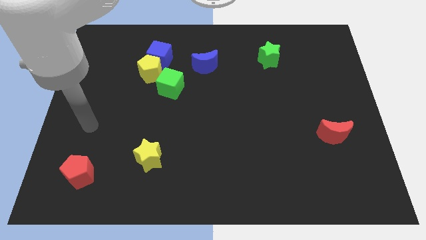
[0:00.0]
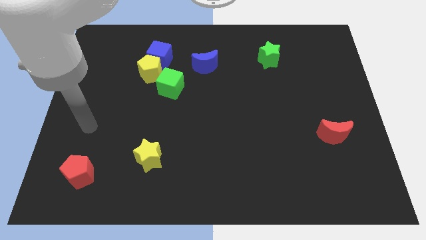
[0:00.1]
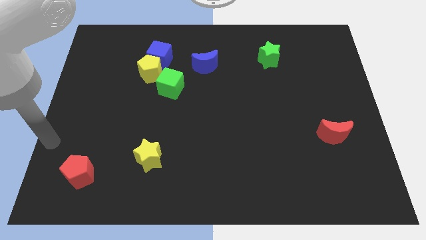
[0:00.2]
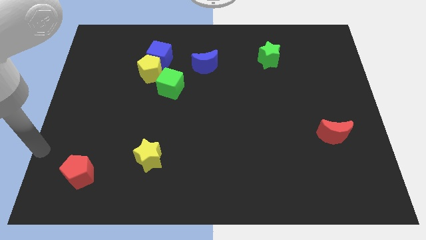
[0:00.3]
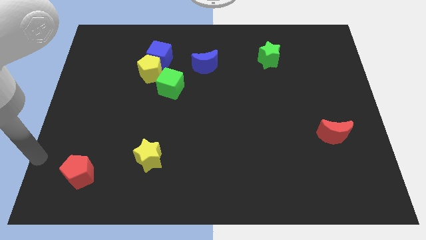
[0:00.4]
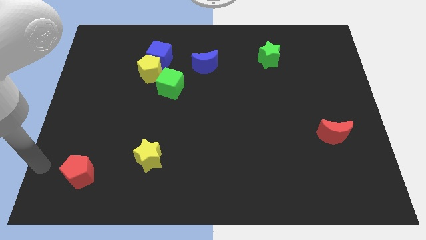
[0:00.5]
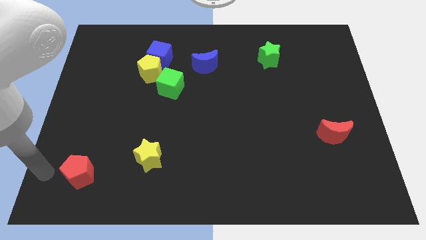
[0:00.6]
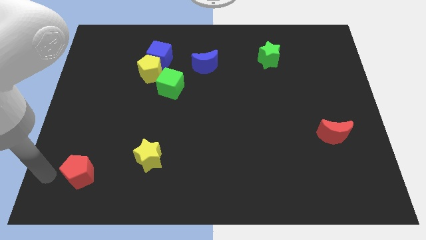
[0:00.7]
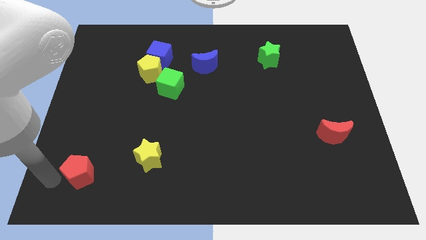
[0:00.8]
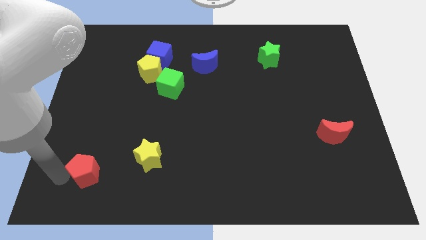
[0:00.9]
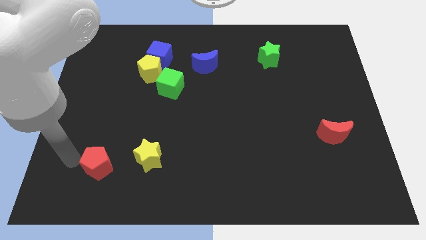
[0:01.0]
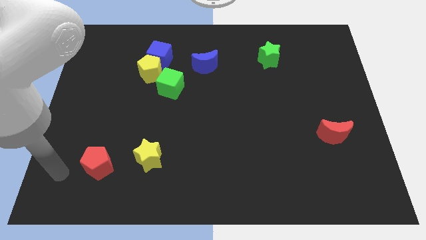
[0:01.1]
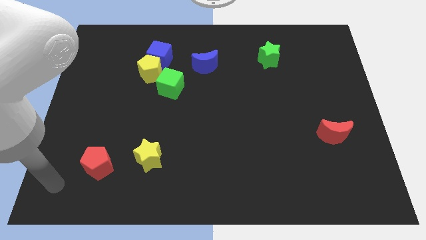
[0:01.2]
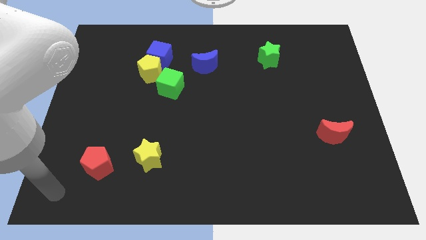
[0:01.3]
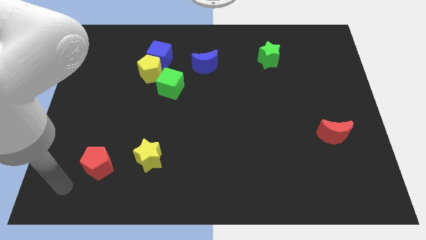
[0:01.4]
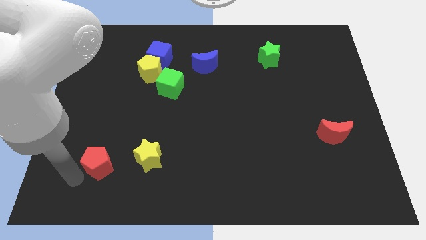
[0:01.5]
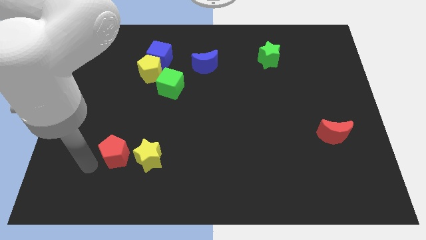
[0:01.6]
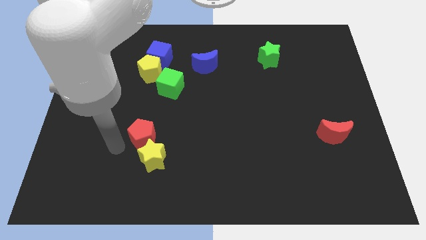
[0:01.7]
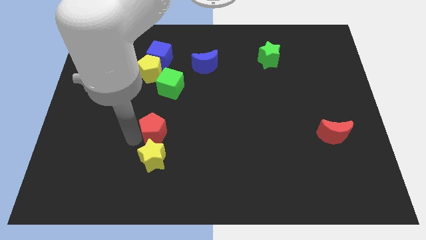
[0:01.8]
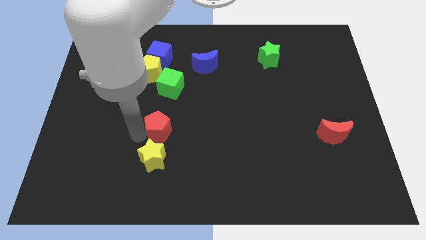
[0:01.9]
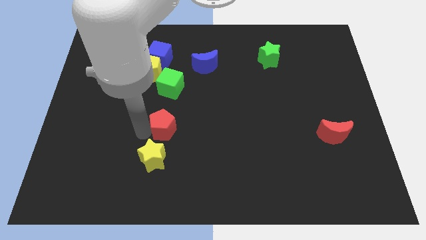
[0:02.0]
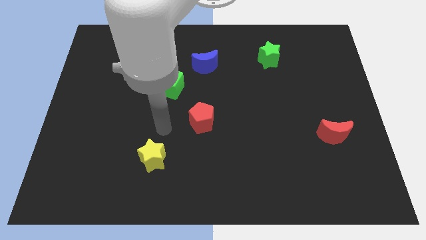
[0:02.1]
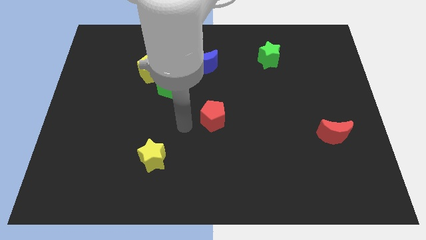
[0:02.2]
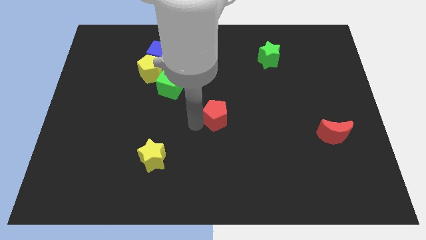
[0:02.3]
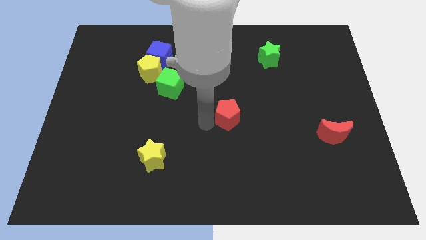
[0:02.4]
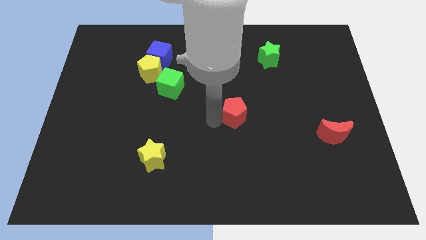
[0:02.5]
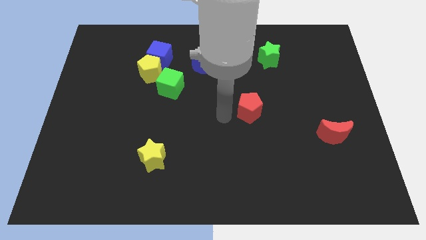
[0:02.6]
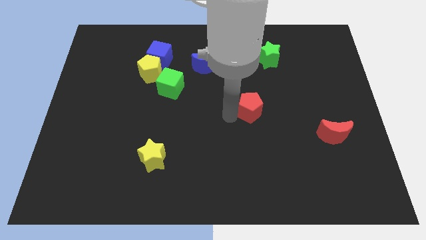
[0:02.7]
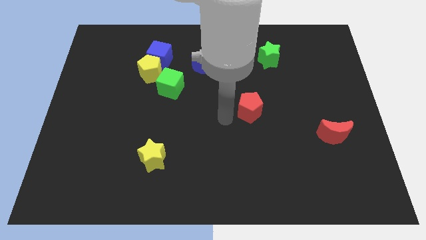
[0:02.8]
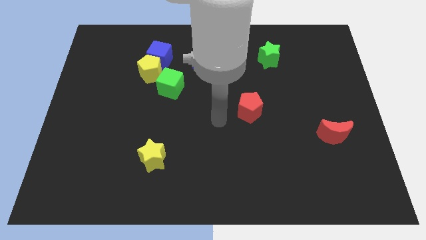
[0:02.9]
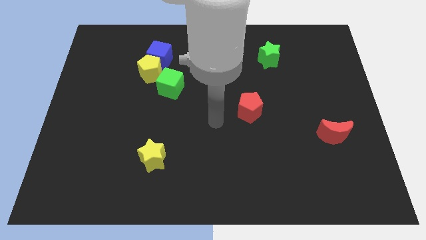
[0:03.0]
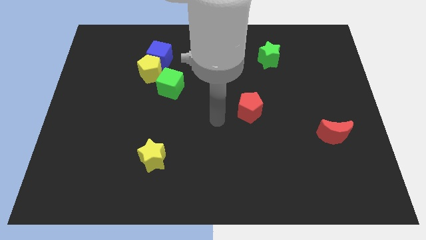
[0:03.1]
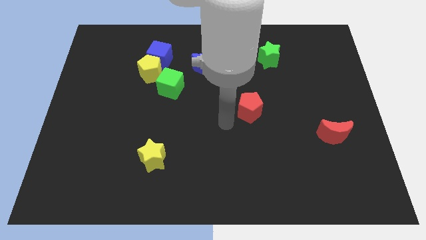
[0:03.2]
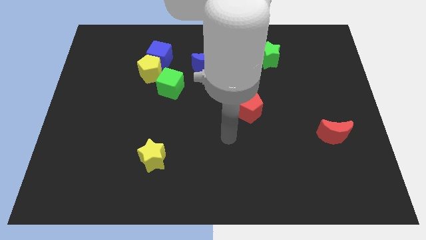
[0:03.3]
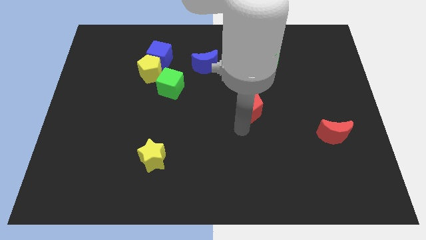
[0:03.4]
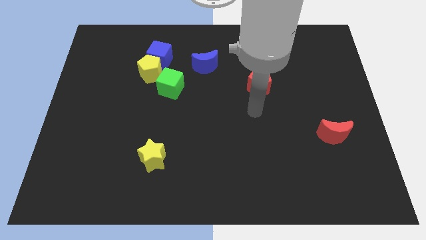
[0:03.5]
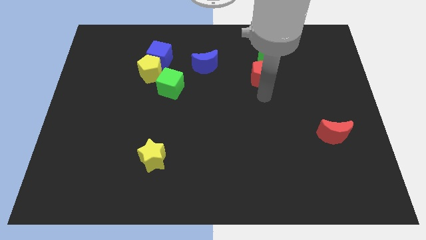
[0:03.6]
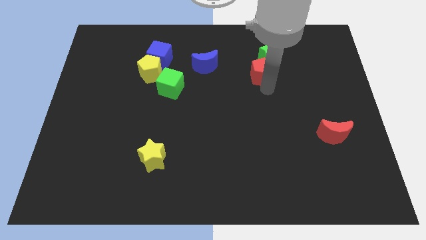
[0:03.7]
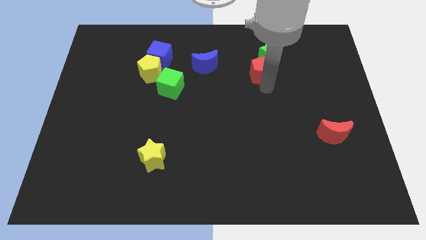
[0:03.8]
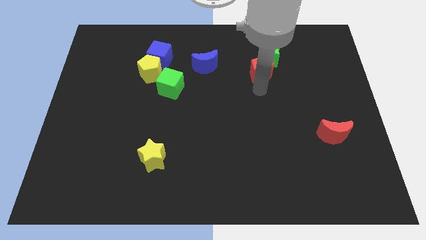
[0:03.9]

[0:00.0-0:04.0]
put the red pentagon towards the green star

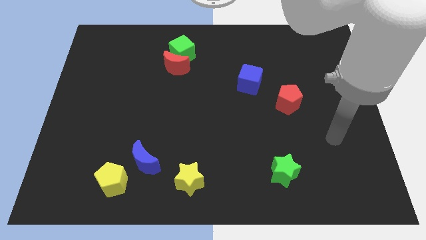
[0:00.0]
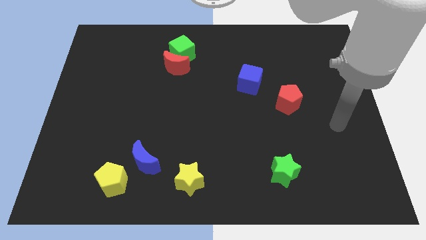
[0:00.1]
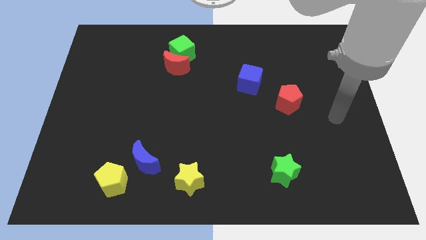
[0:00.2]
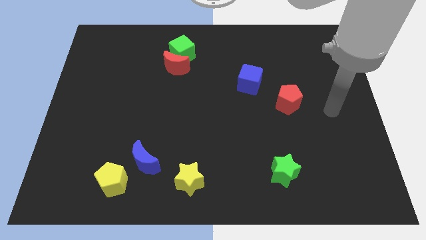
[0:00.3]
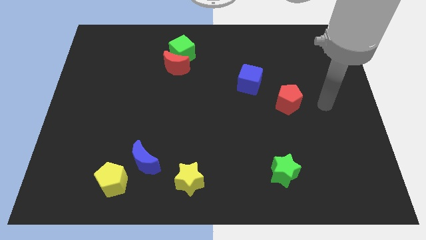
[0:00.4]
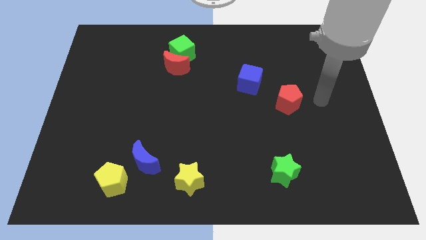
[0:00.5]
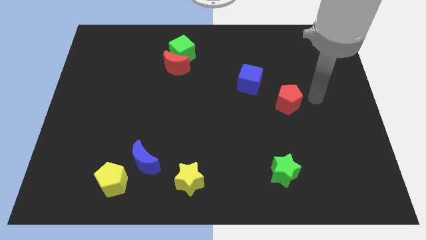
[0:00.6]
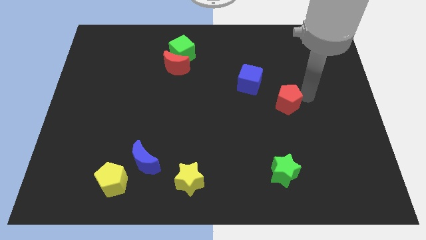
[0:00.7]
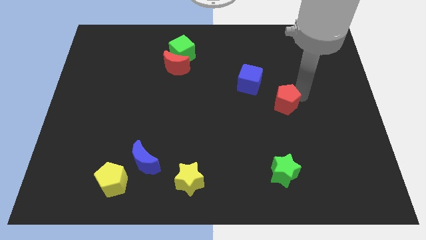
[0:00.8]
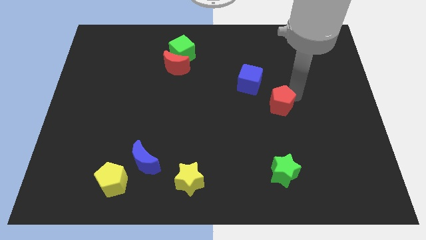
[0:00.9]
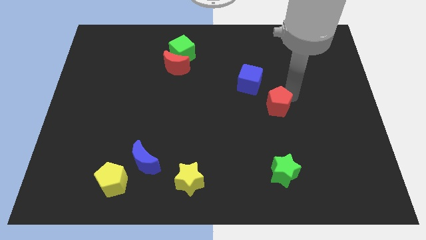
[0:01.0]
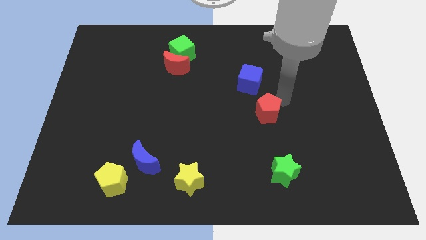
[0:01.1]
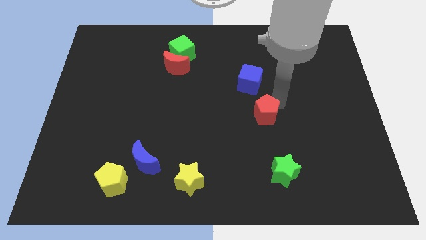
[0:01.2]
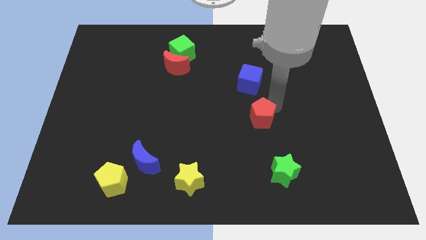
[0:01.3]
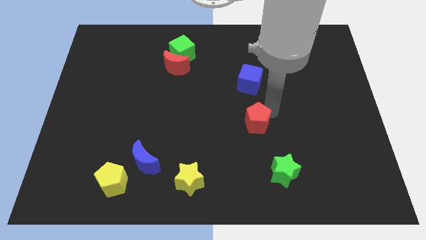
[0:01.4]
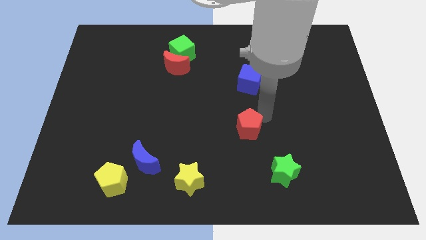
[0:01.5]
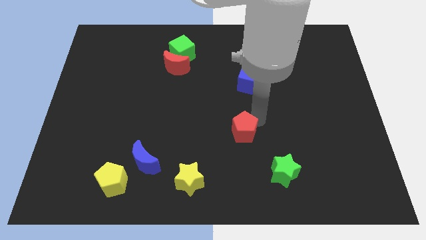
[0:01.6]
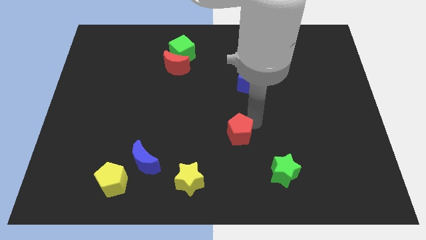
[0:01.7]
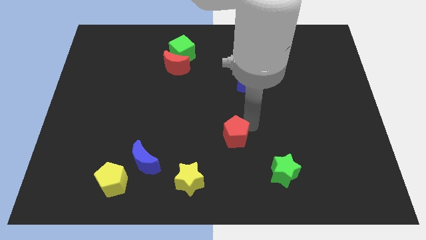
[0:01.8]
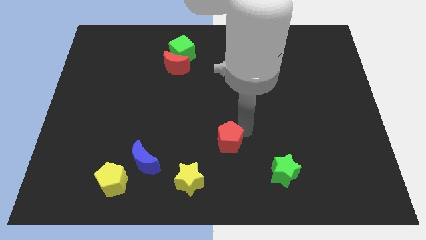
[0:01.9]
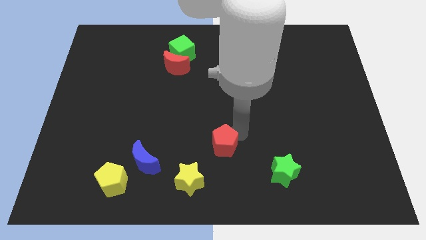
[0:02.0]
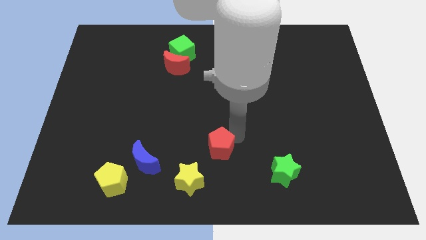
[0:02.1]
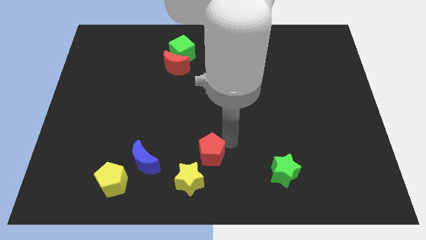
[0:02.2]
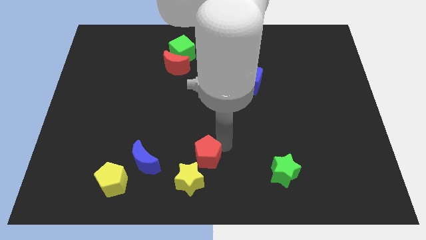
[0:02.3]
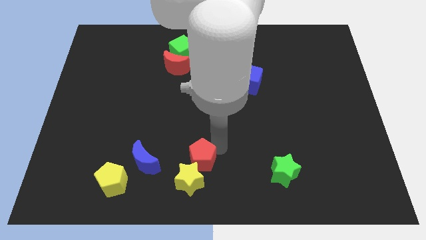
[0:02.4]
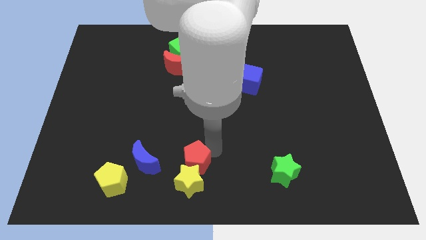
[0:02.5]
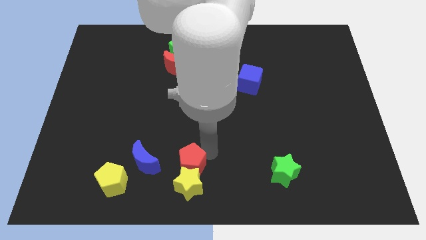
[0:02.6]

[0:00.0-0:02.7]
move the red pentagon towards the yellow star

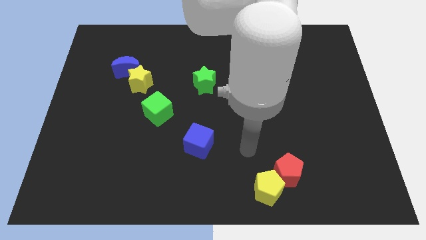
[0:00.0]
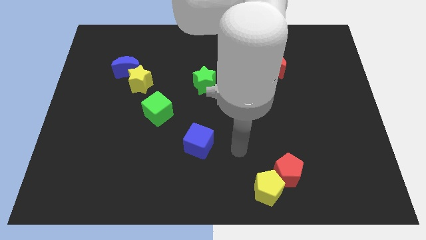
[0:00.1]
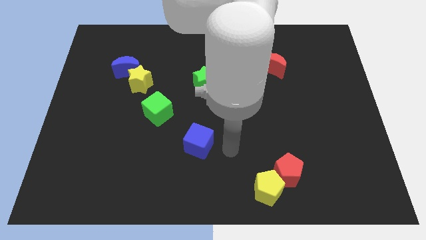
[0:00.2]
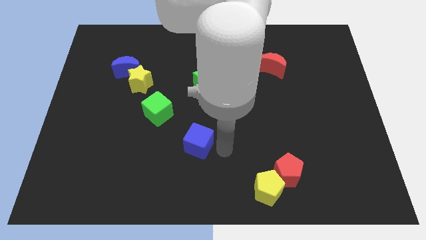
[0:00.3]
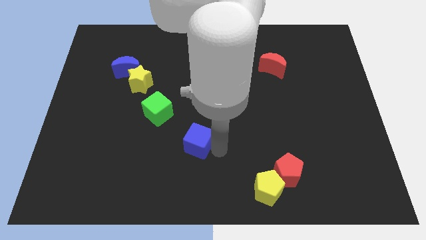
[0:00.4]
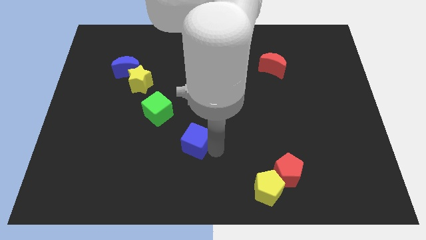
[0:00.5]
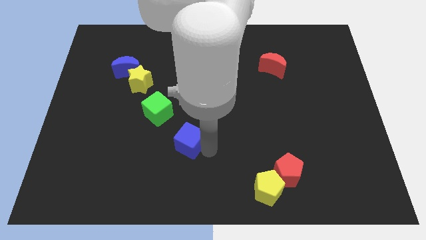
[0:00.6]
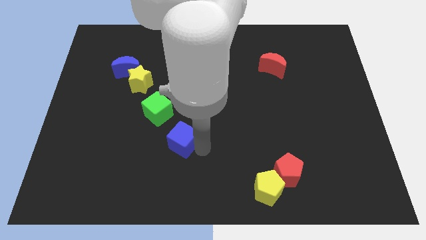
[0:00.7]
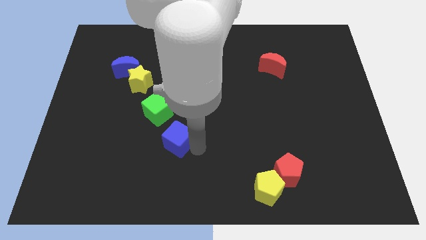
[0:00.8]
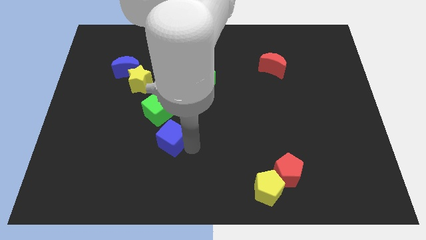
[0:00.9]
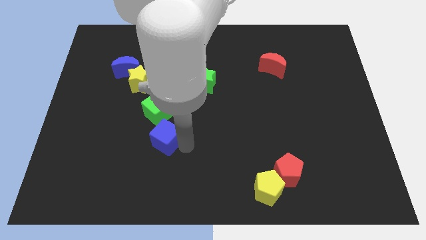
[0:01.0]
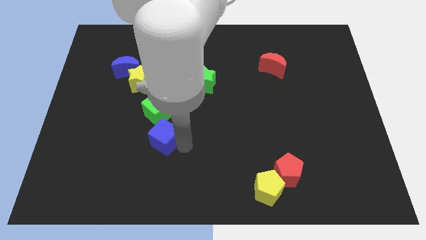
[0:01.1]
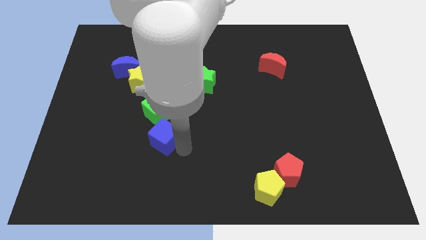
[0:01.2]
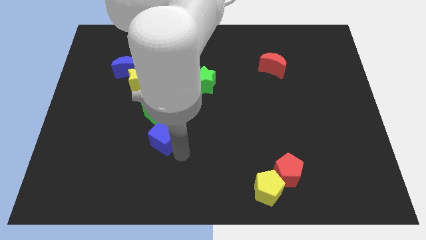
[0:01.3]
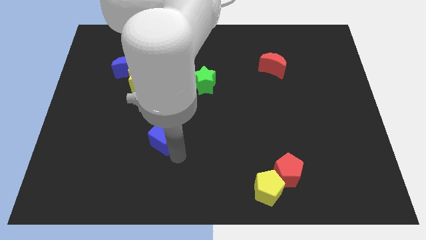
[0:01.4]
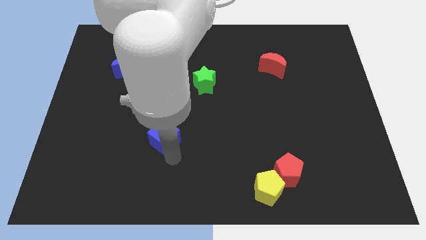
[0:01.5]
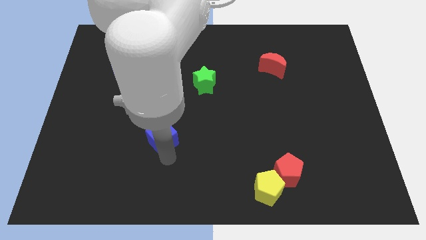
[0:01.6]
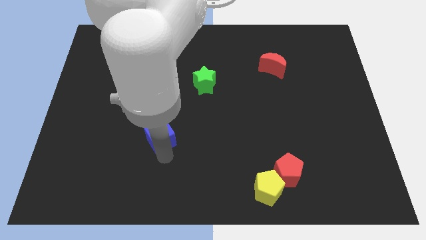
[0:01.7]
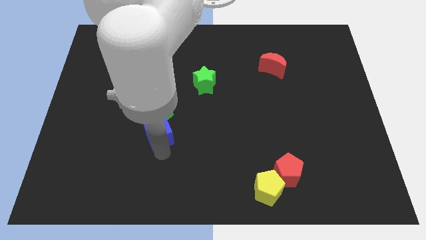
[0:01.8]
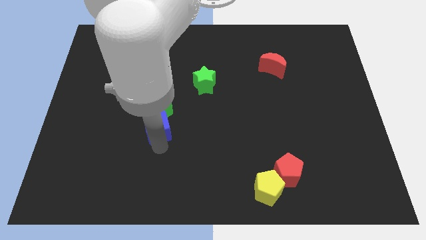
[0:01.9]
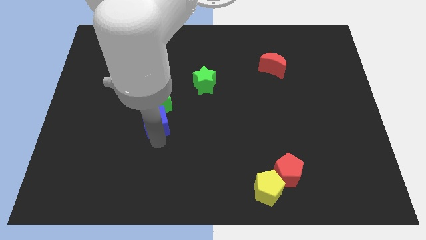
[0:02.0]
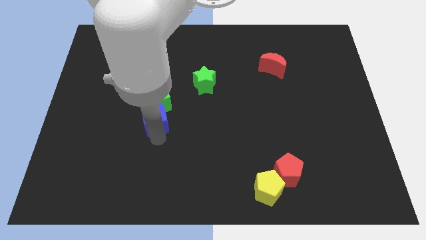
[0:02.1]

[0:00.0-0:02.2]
slide the blue cube next to the green cube
